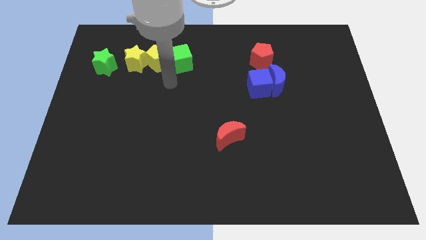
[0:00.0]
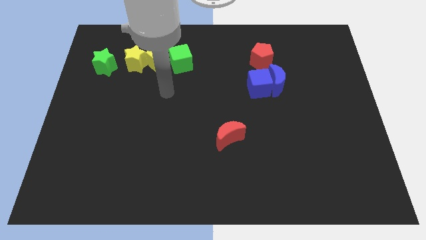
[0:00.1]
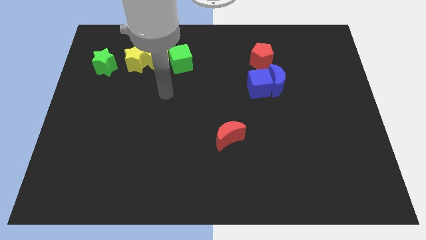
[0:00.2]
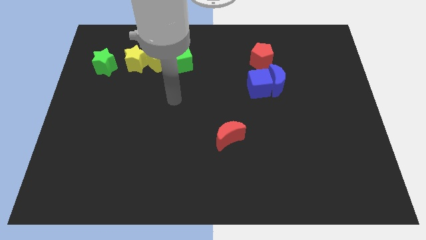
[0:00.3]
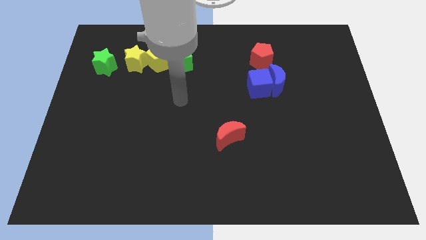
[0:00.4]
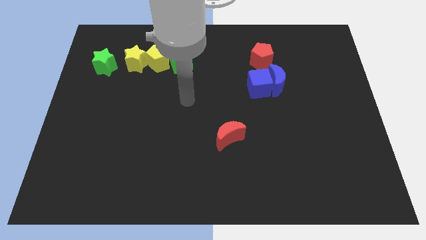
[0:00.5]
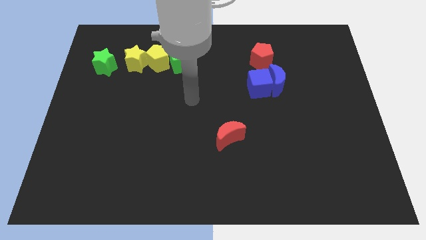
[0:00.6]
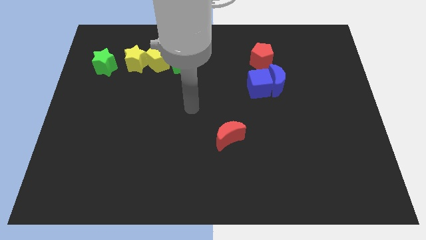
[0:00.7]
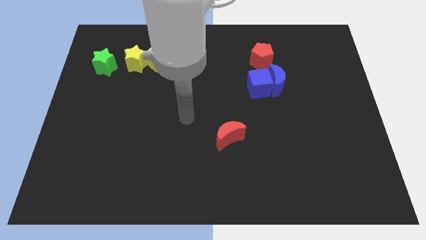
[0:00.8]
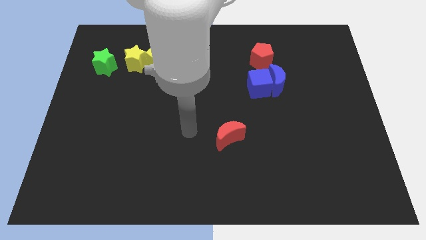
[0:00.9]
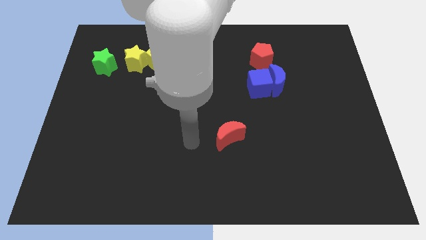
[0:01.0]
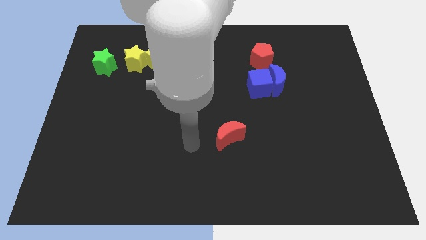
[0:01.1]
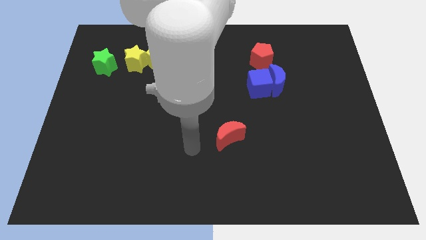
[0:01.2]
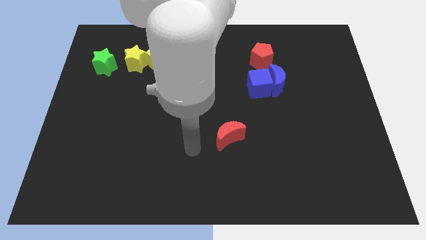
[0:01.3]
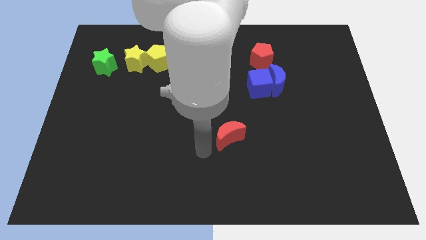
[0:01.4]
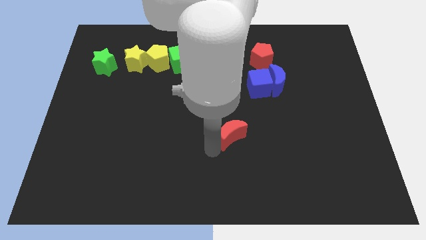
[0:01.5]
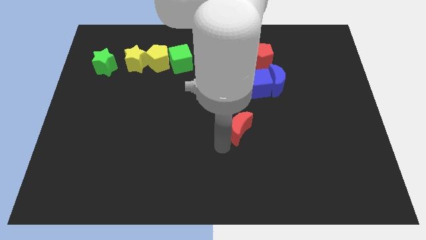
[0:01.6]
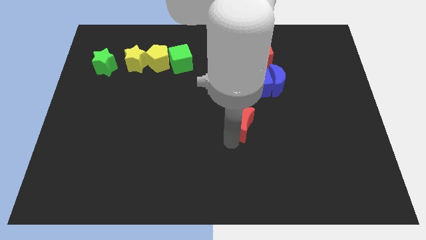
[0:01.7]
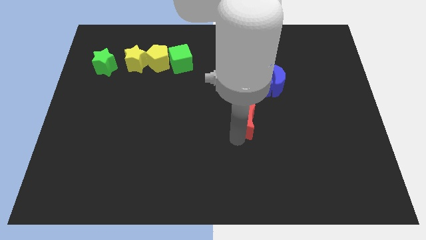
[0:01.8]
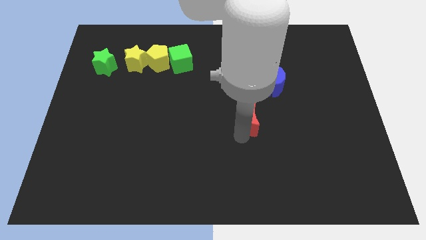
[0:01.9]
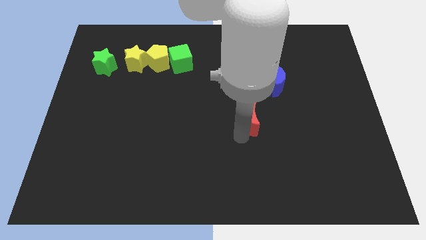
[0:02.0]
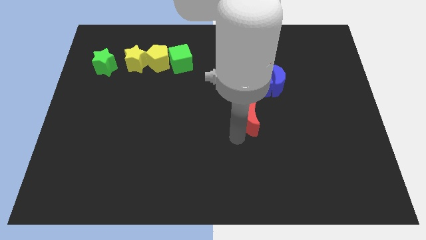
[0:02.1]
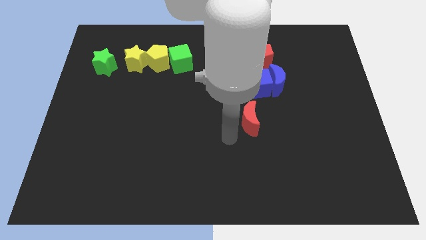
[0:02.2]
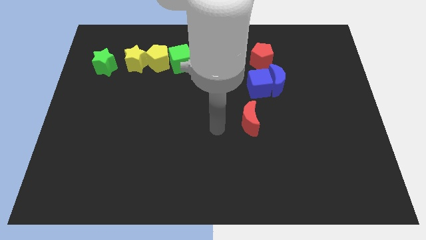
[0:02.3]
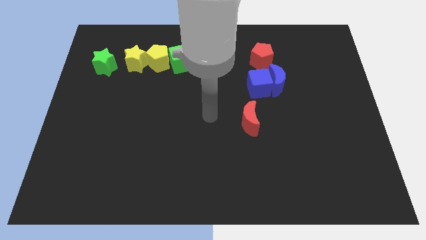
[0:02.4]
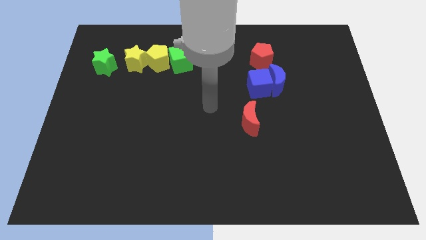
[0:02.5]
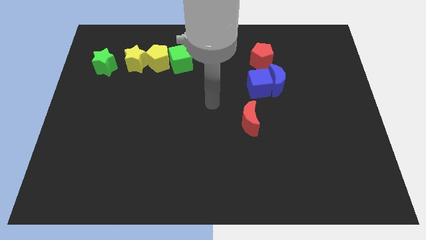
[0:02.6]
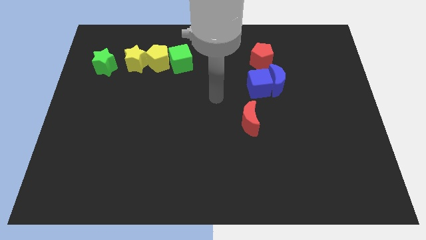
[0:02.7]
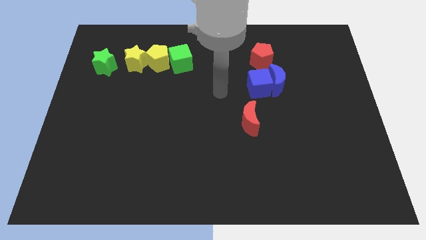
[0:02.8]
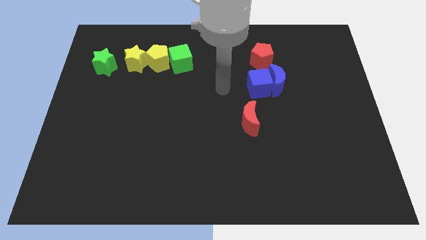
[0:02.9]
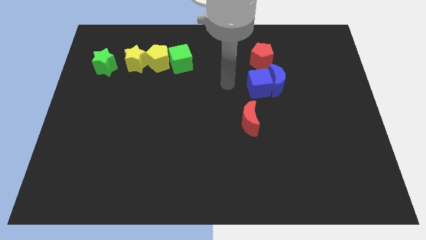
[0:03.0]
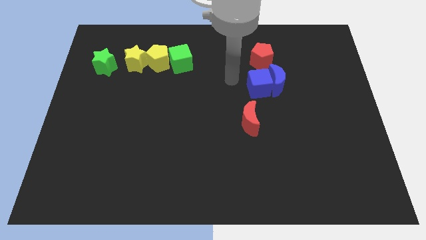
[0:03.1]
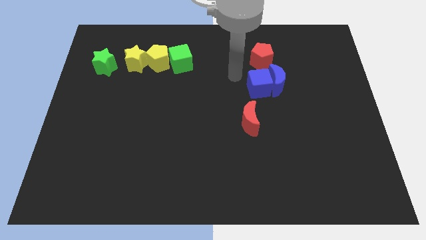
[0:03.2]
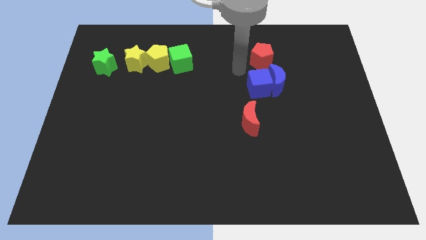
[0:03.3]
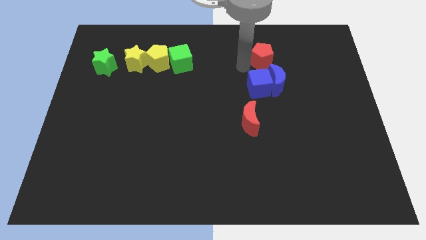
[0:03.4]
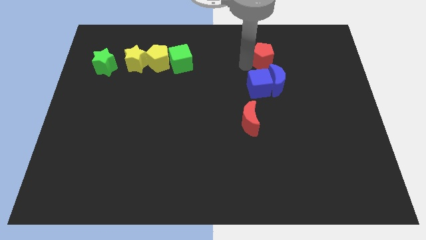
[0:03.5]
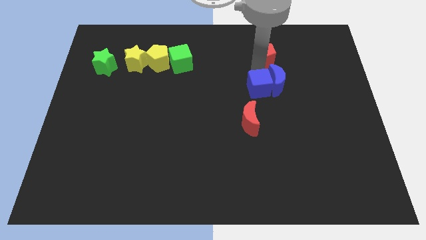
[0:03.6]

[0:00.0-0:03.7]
push the red crescent to the bottom of the blue cube

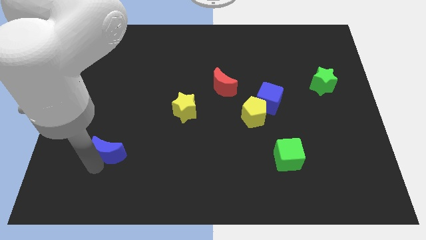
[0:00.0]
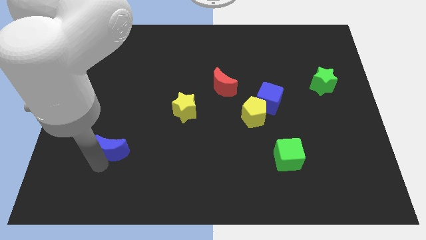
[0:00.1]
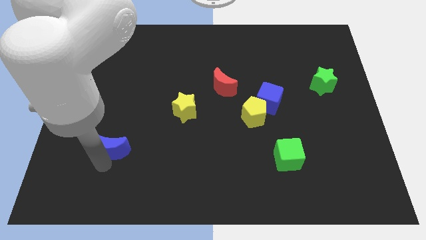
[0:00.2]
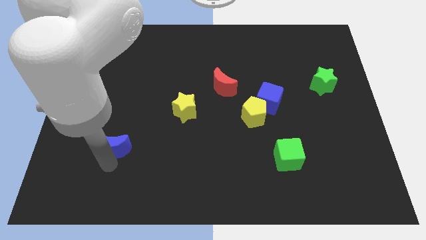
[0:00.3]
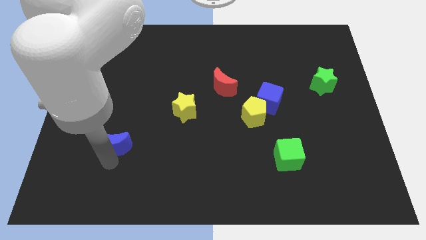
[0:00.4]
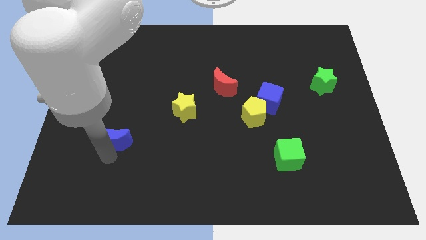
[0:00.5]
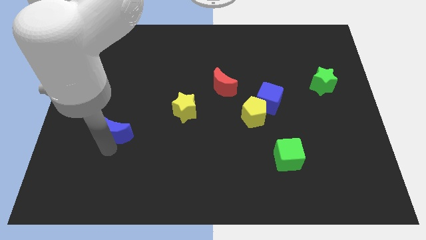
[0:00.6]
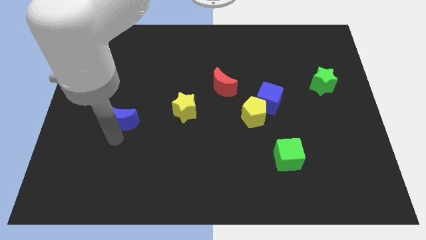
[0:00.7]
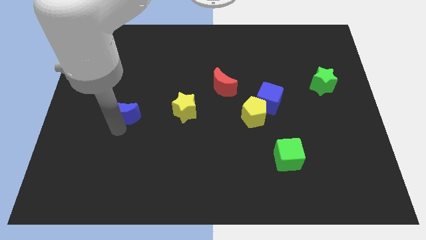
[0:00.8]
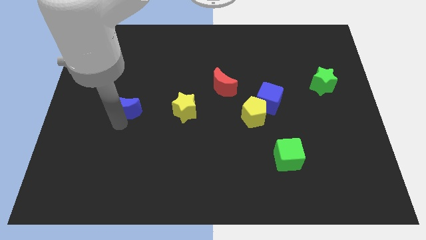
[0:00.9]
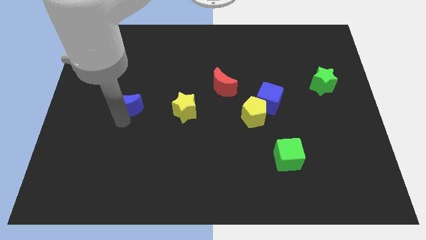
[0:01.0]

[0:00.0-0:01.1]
push the blue crescent to the left of the yellow star

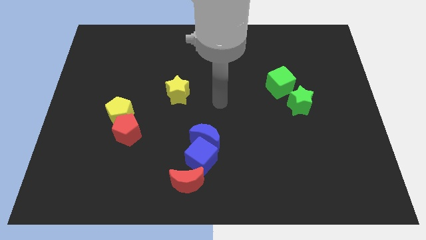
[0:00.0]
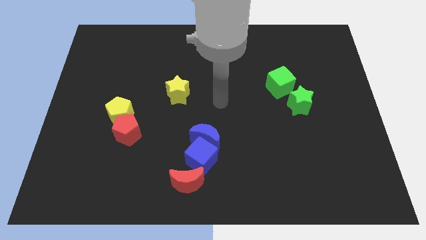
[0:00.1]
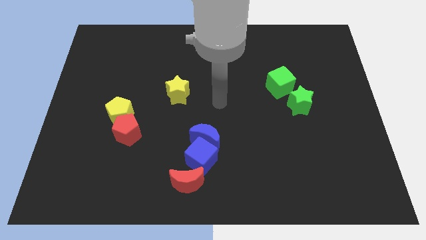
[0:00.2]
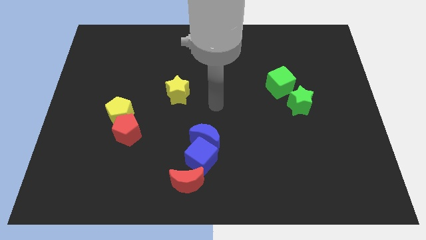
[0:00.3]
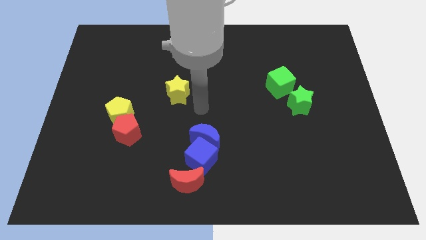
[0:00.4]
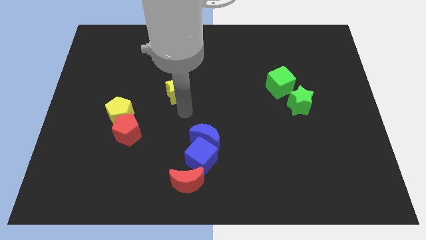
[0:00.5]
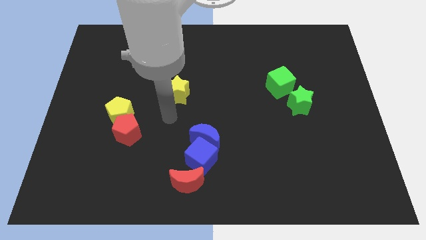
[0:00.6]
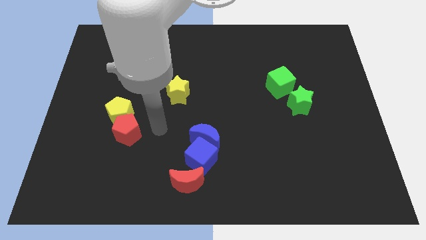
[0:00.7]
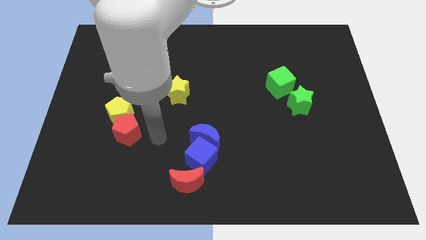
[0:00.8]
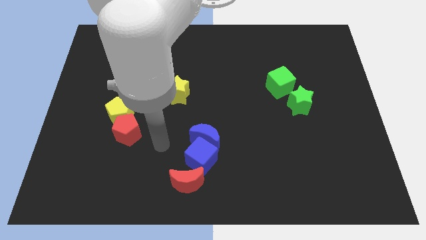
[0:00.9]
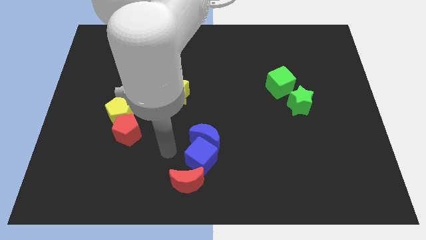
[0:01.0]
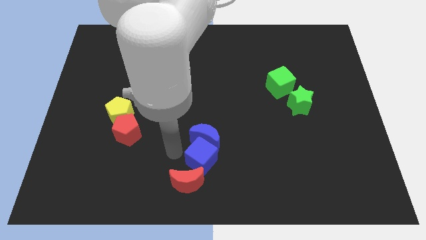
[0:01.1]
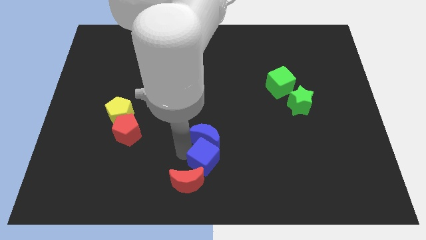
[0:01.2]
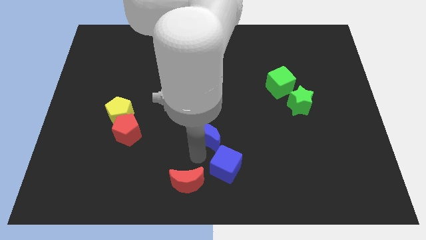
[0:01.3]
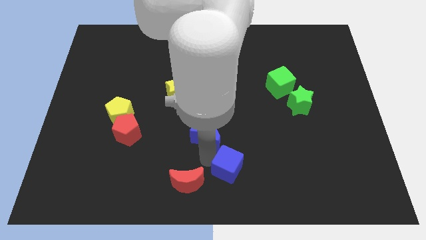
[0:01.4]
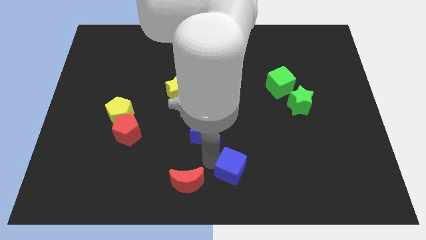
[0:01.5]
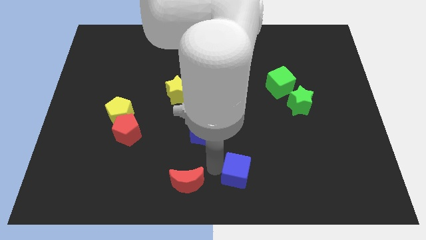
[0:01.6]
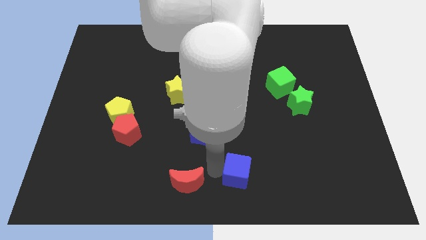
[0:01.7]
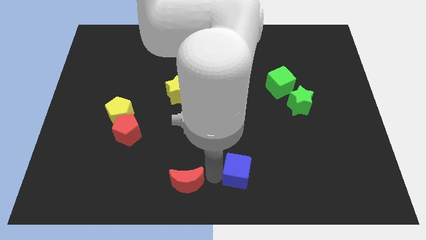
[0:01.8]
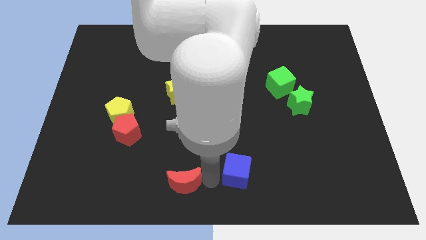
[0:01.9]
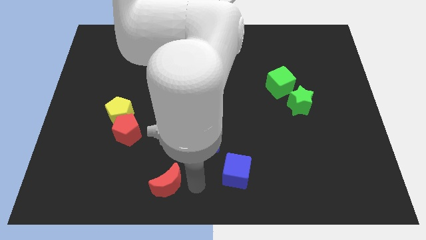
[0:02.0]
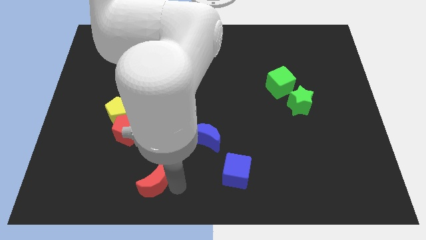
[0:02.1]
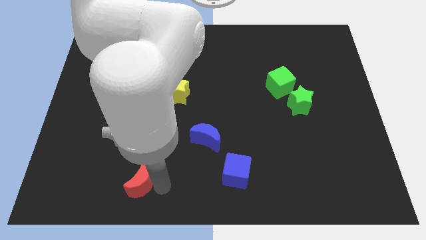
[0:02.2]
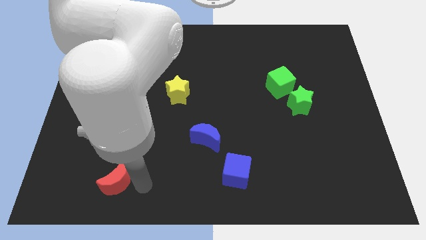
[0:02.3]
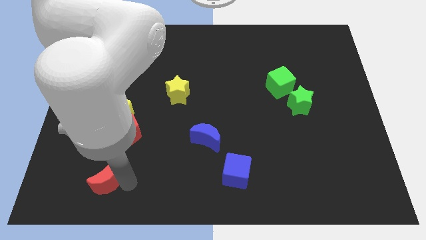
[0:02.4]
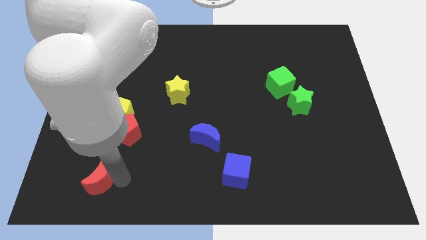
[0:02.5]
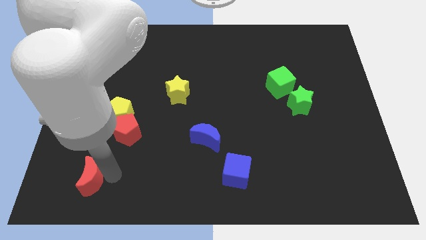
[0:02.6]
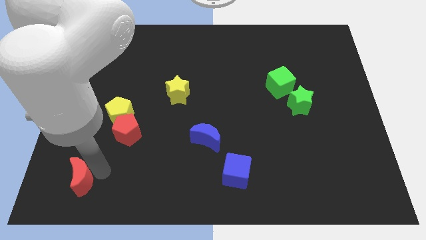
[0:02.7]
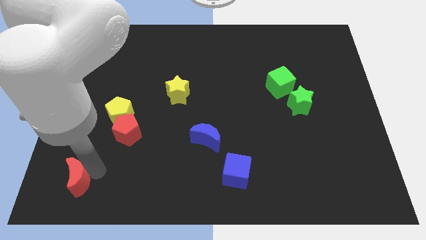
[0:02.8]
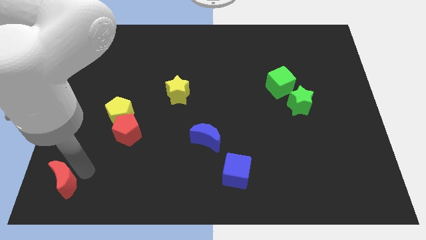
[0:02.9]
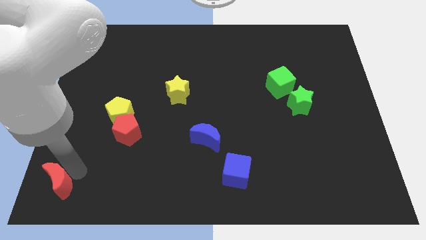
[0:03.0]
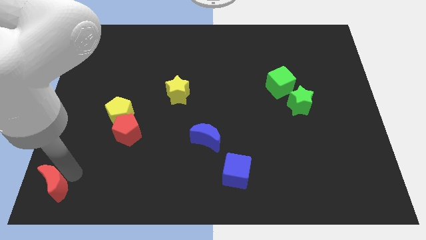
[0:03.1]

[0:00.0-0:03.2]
move the red moon diagonal left to the red pentagon

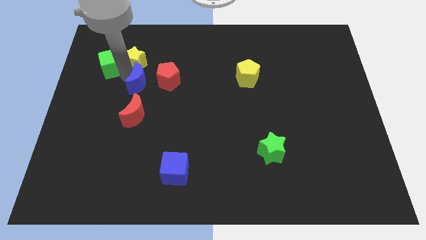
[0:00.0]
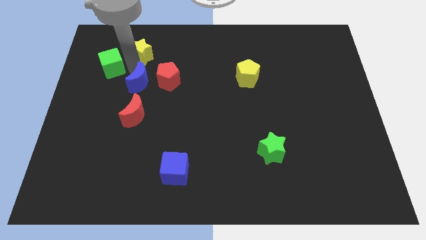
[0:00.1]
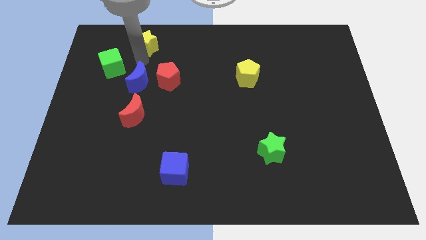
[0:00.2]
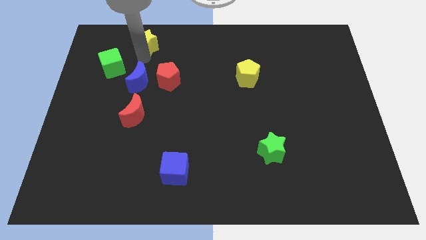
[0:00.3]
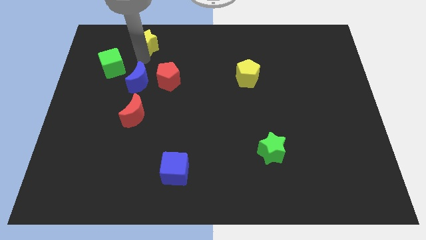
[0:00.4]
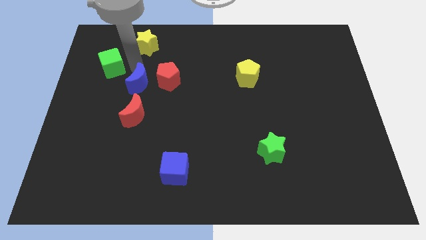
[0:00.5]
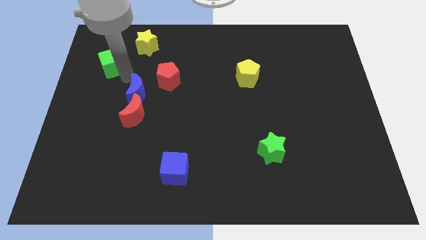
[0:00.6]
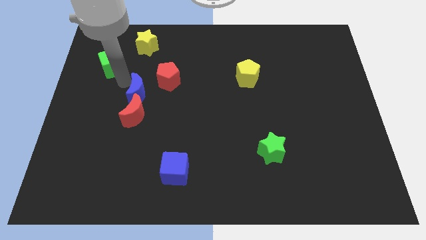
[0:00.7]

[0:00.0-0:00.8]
move the yellow star away from the green cube
